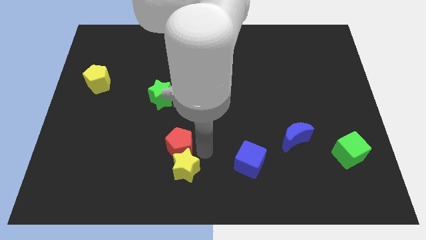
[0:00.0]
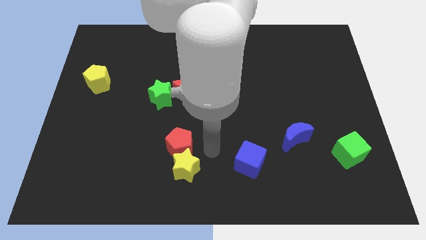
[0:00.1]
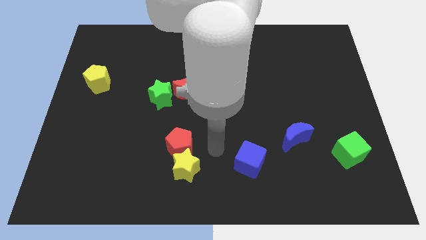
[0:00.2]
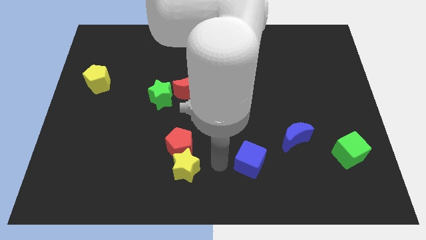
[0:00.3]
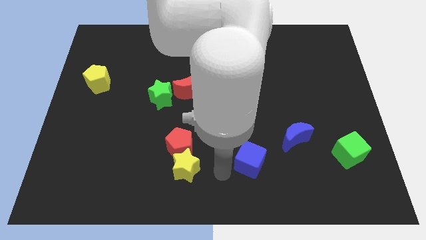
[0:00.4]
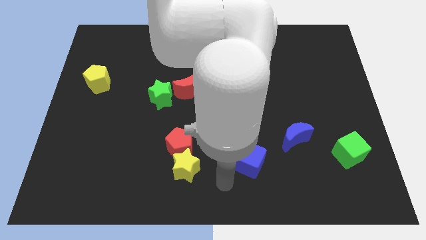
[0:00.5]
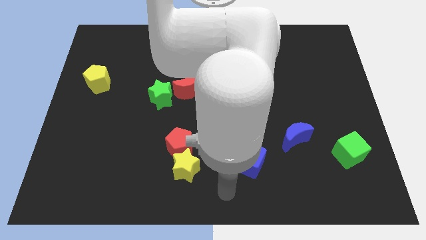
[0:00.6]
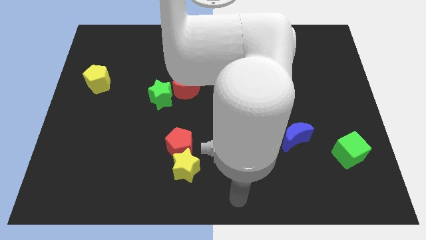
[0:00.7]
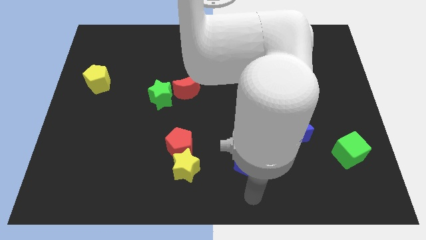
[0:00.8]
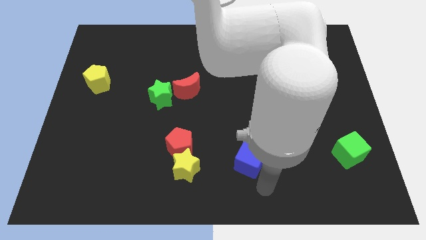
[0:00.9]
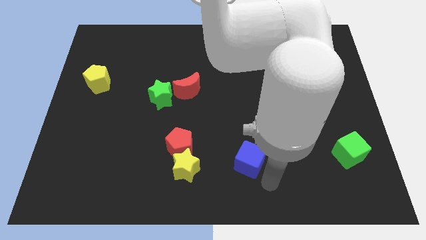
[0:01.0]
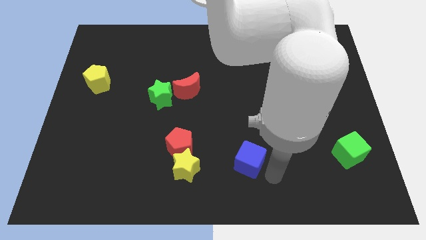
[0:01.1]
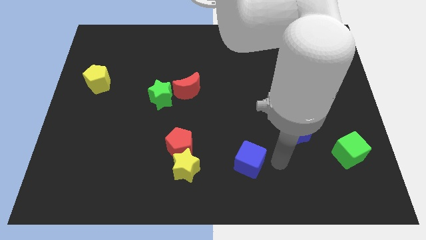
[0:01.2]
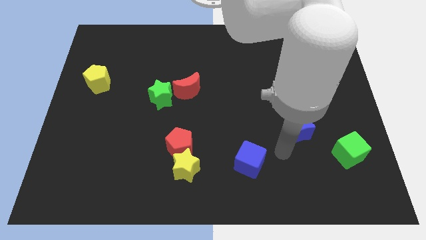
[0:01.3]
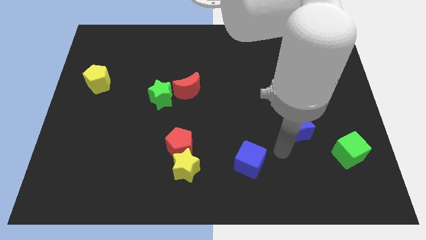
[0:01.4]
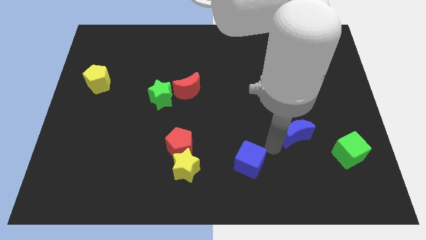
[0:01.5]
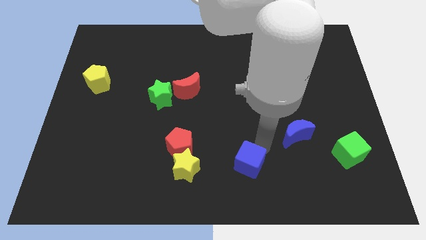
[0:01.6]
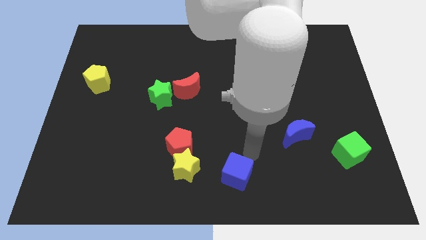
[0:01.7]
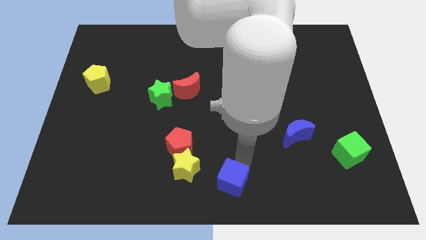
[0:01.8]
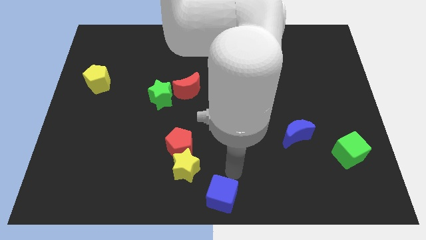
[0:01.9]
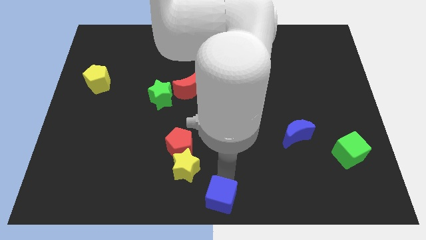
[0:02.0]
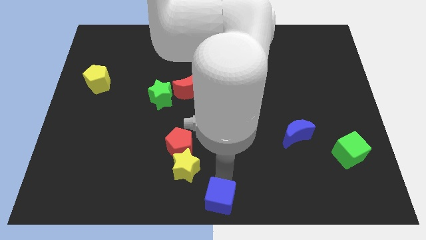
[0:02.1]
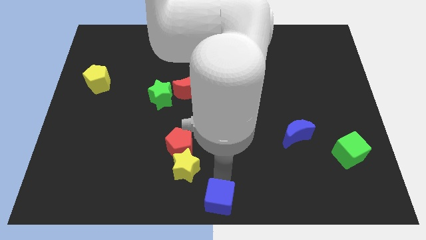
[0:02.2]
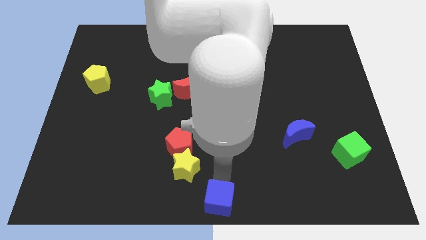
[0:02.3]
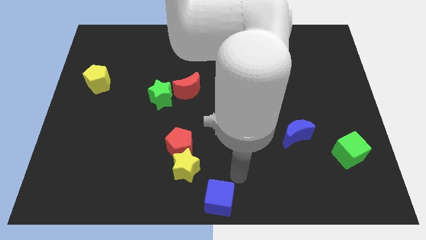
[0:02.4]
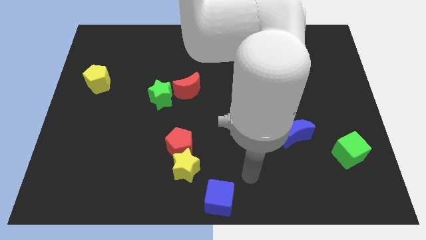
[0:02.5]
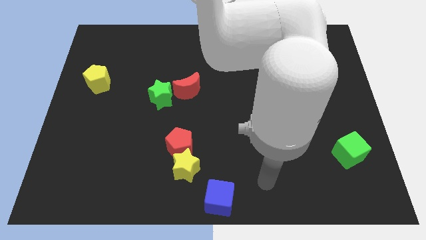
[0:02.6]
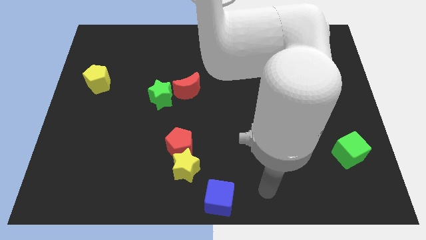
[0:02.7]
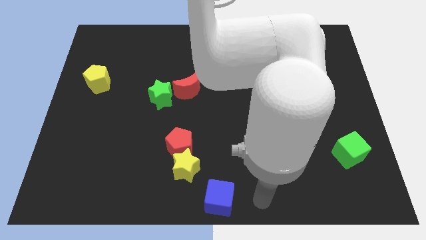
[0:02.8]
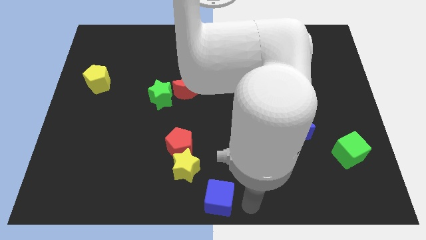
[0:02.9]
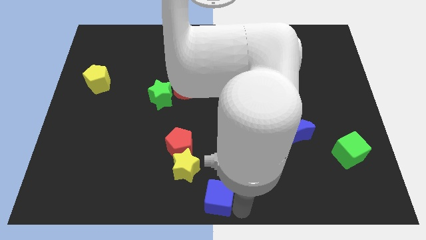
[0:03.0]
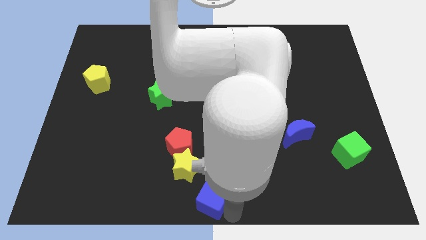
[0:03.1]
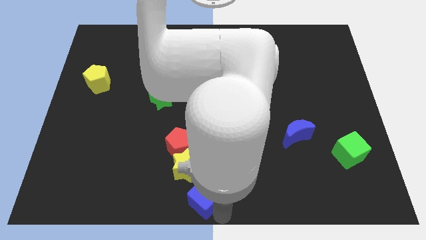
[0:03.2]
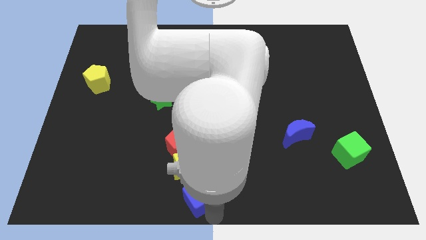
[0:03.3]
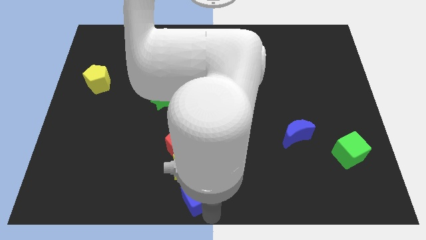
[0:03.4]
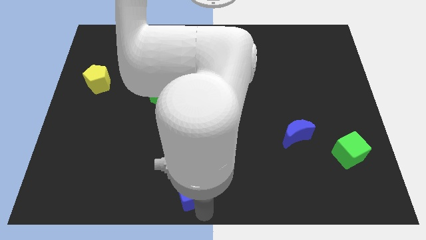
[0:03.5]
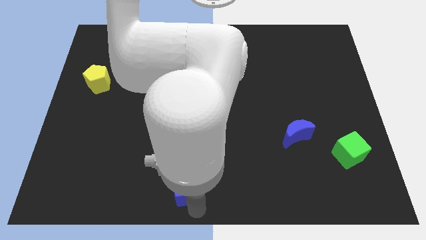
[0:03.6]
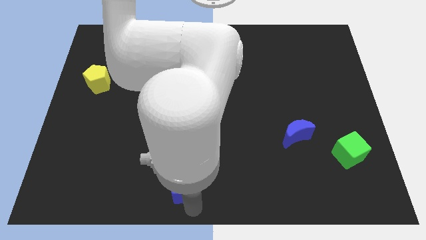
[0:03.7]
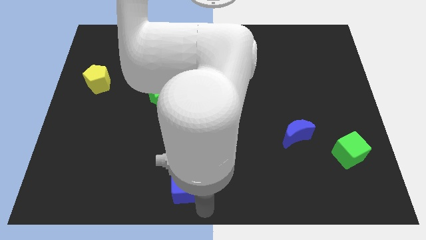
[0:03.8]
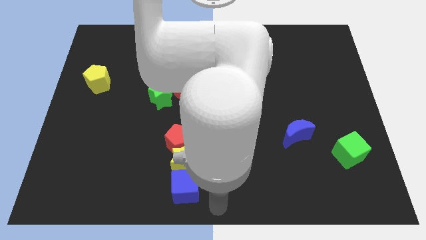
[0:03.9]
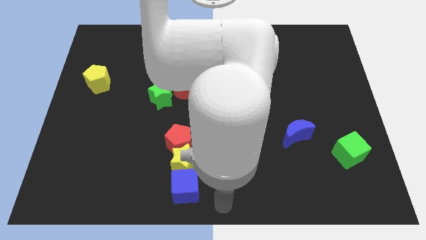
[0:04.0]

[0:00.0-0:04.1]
push blue cube below to the yellow star

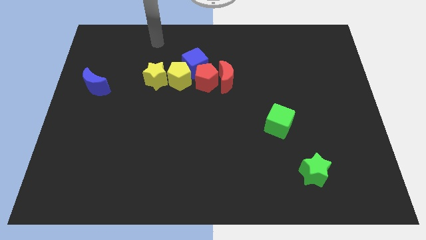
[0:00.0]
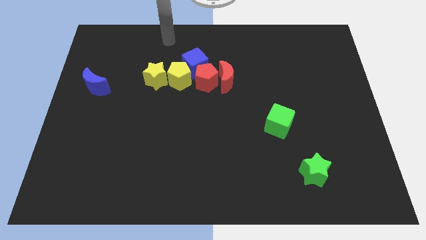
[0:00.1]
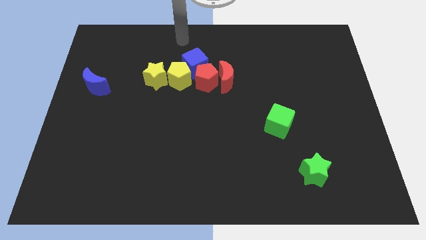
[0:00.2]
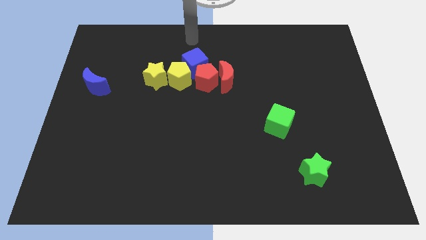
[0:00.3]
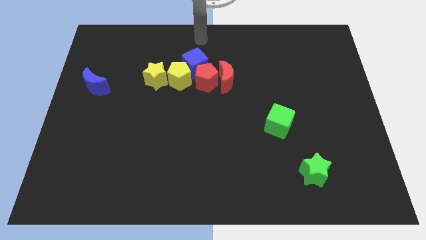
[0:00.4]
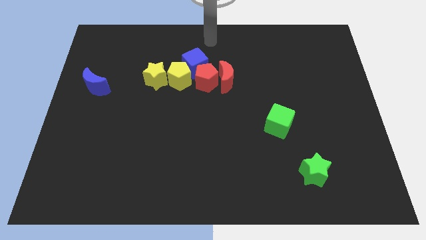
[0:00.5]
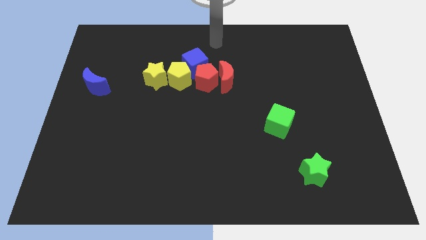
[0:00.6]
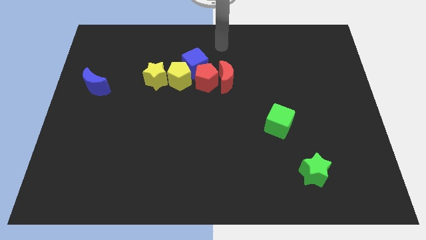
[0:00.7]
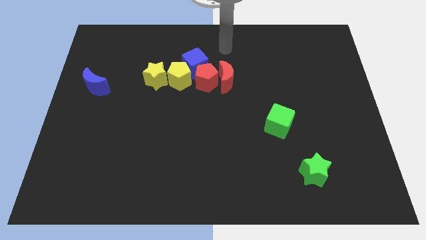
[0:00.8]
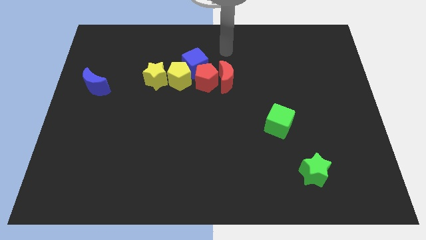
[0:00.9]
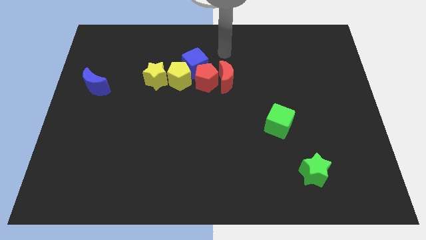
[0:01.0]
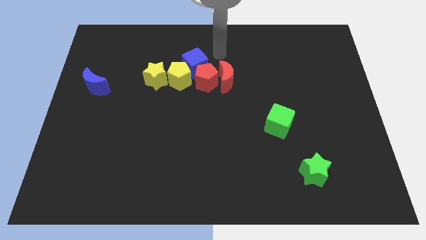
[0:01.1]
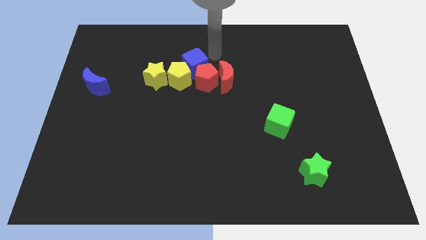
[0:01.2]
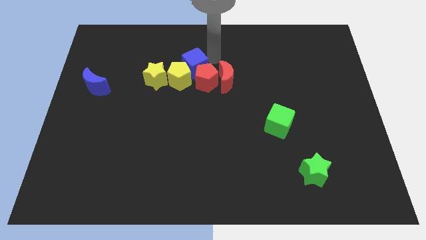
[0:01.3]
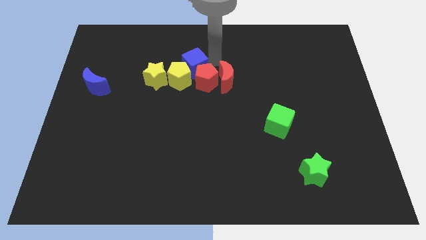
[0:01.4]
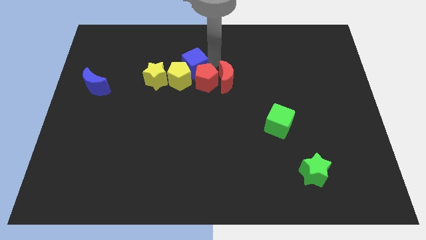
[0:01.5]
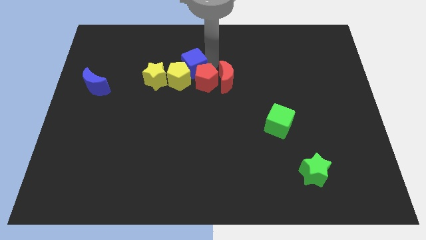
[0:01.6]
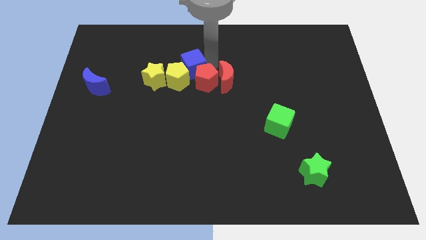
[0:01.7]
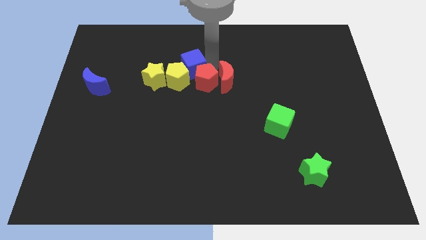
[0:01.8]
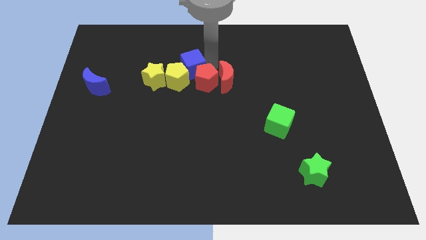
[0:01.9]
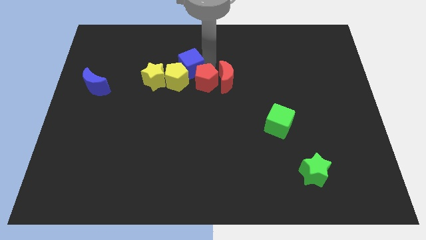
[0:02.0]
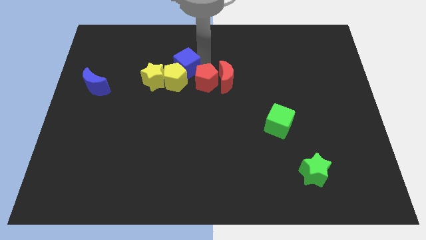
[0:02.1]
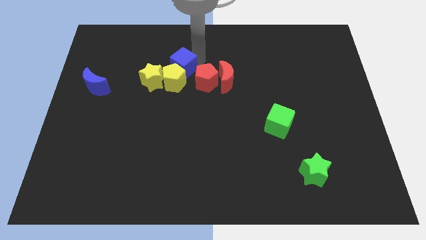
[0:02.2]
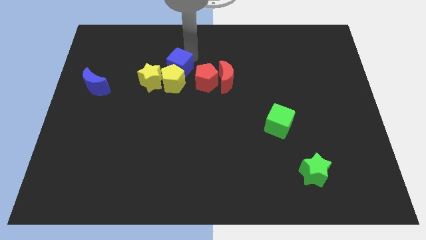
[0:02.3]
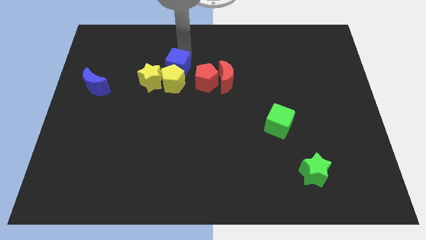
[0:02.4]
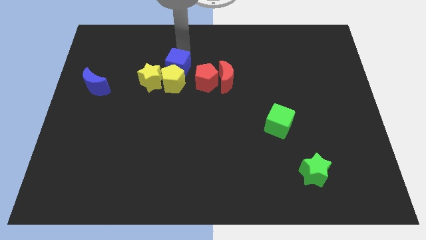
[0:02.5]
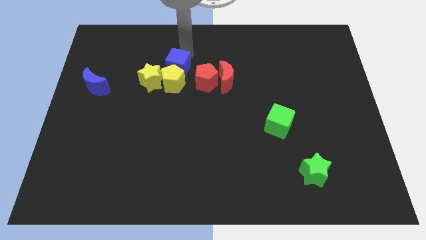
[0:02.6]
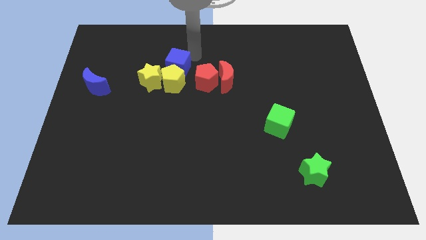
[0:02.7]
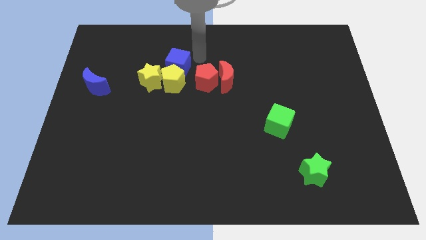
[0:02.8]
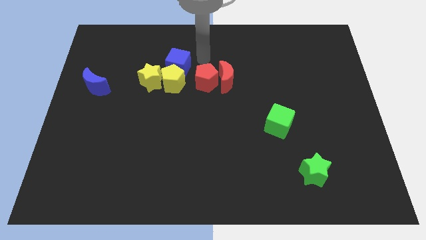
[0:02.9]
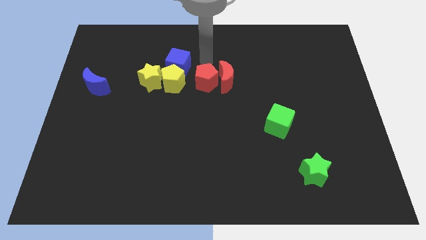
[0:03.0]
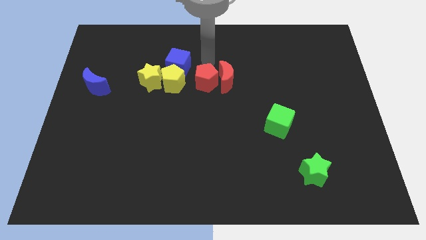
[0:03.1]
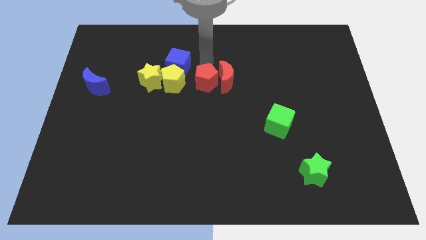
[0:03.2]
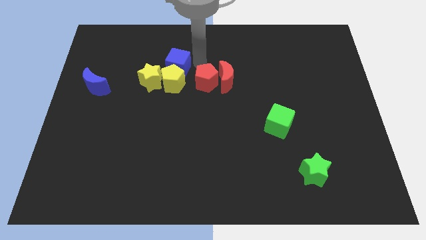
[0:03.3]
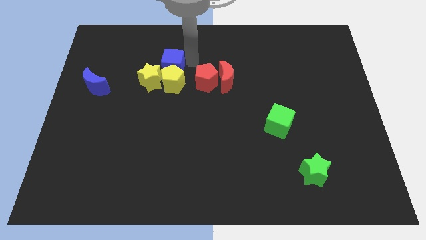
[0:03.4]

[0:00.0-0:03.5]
place the blue cube on top of the yellow pentagon

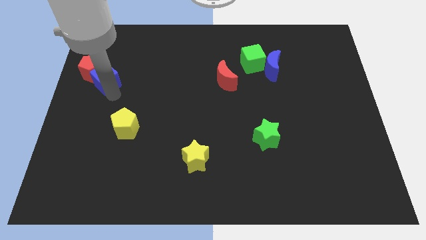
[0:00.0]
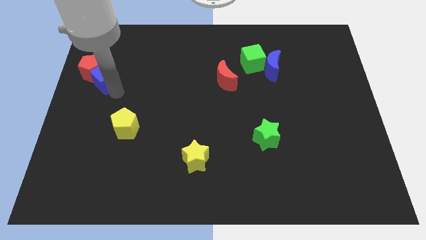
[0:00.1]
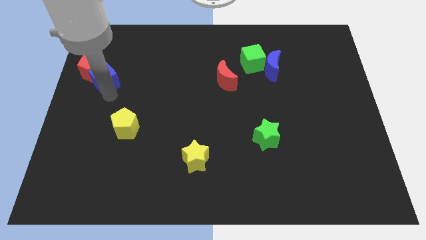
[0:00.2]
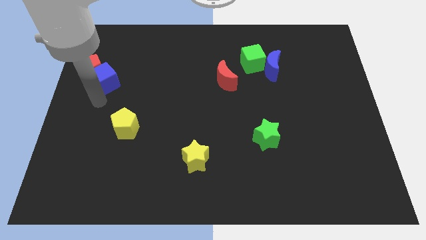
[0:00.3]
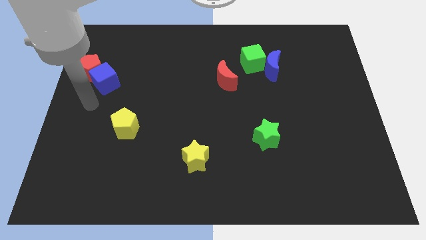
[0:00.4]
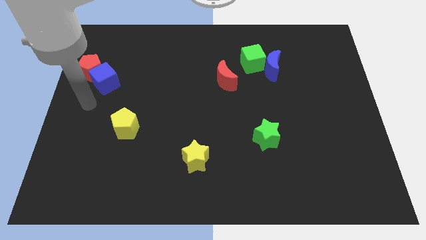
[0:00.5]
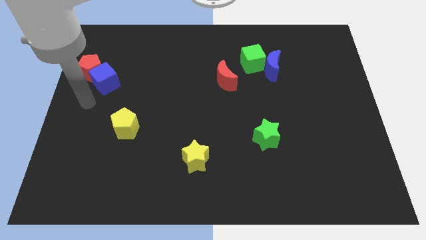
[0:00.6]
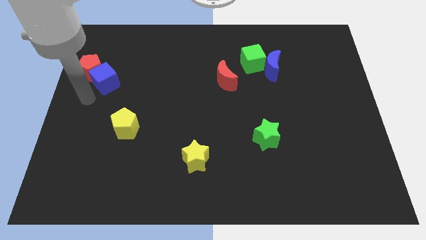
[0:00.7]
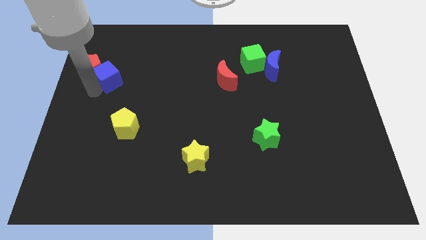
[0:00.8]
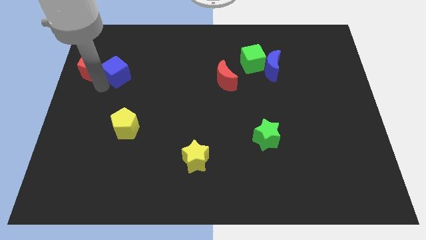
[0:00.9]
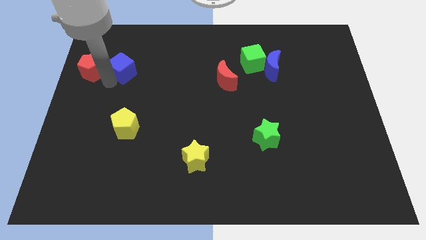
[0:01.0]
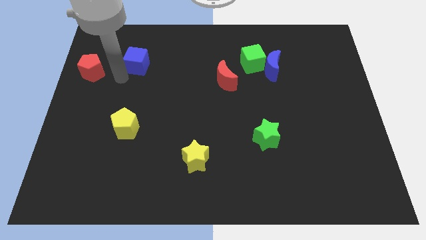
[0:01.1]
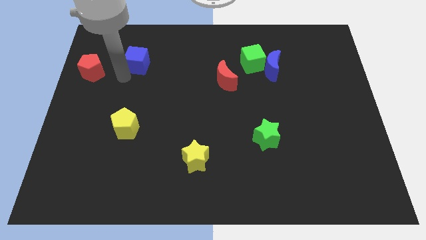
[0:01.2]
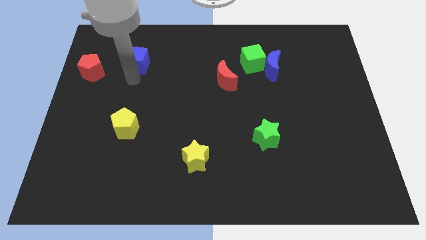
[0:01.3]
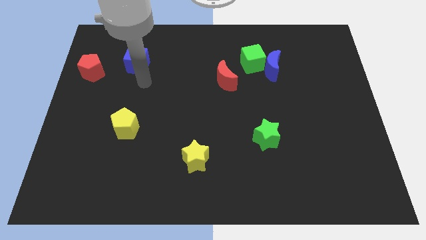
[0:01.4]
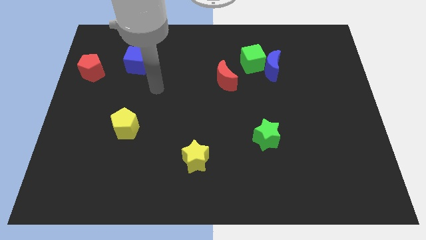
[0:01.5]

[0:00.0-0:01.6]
separate blue cube from the red pentagon
